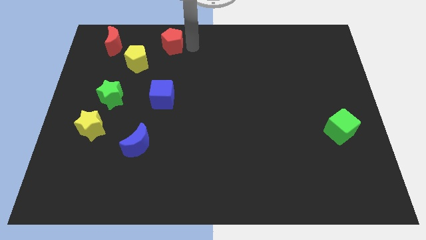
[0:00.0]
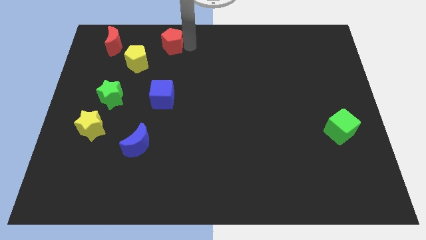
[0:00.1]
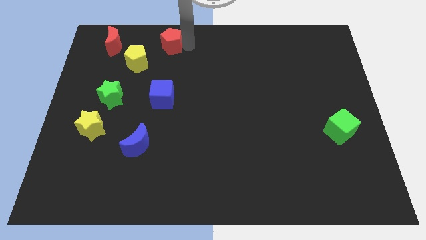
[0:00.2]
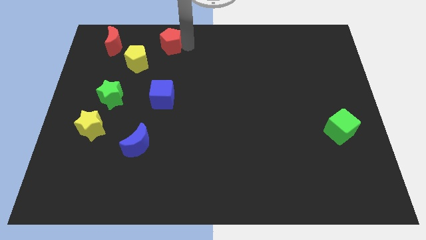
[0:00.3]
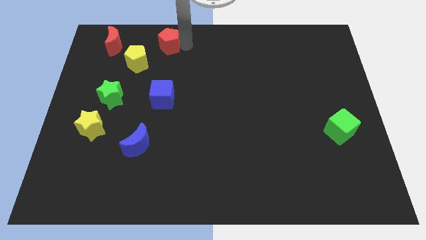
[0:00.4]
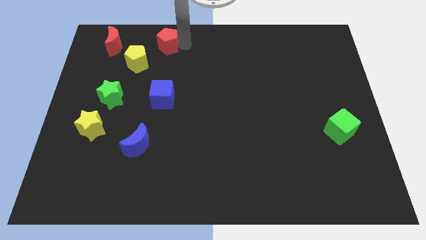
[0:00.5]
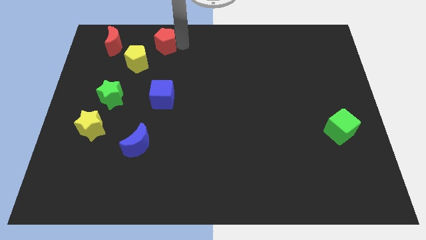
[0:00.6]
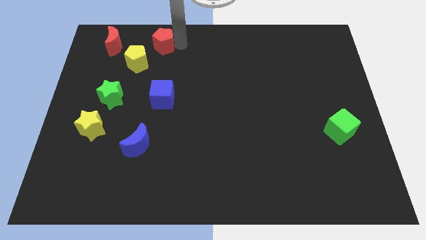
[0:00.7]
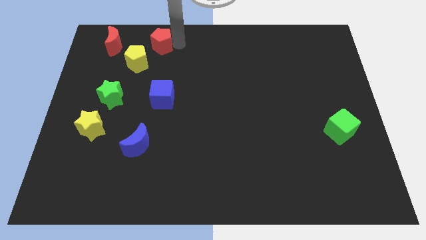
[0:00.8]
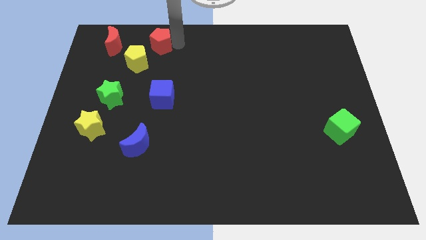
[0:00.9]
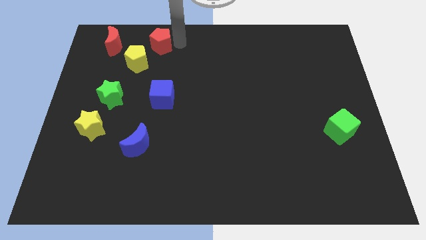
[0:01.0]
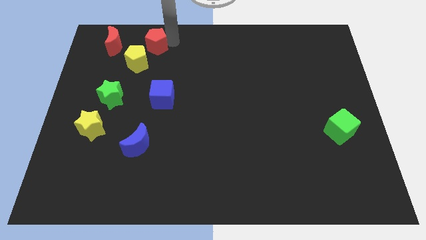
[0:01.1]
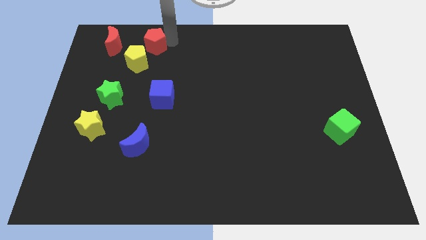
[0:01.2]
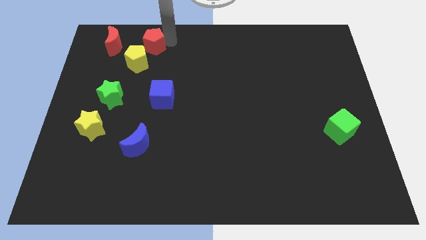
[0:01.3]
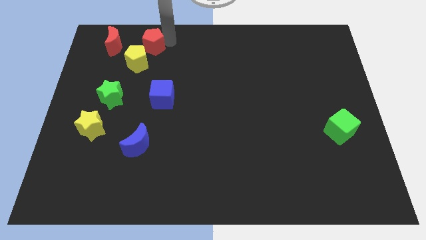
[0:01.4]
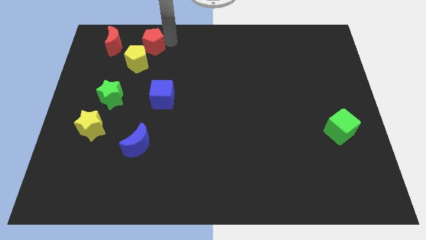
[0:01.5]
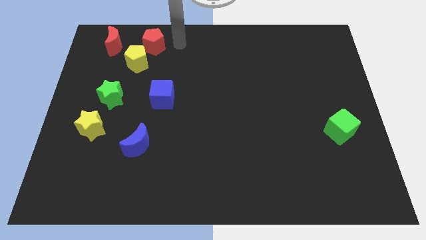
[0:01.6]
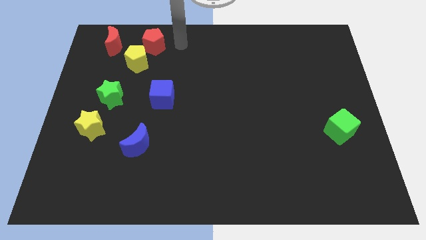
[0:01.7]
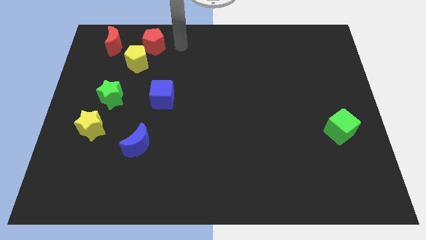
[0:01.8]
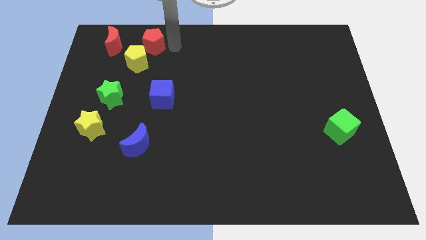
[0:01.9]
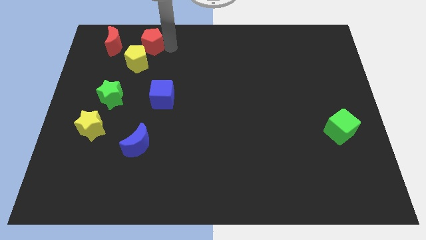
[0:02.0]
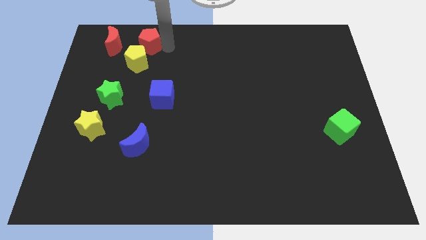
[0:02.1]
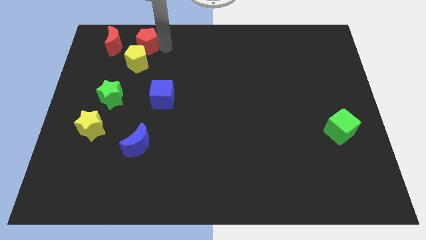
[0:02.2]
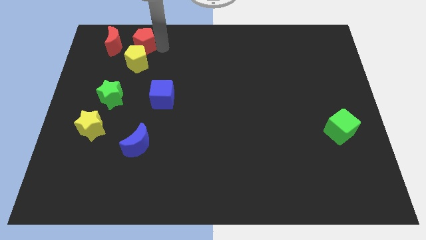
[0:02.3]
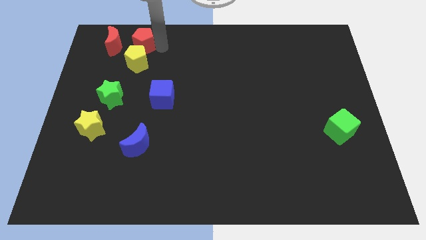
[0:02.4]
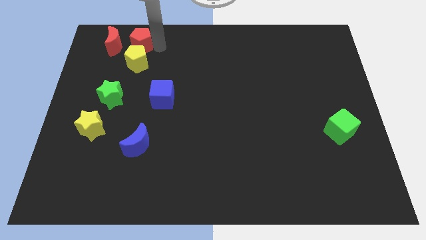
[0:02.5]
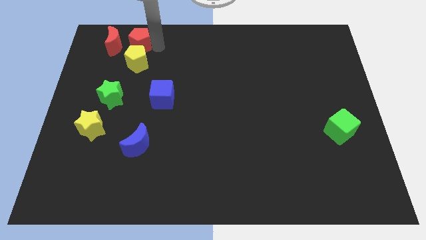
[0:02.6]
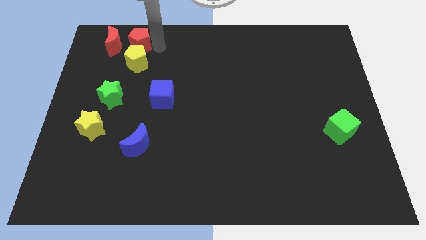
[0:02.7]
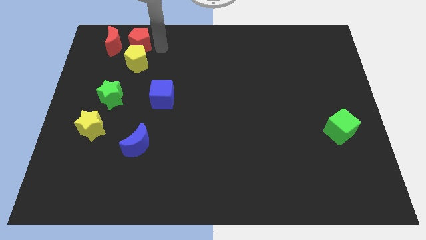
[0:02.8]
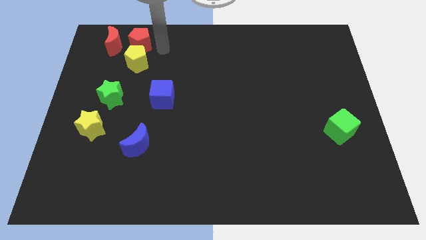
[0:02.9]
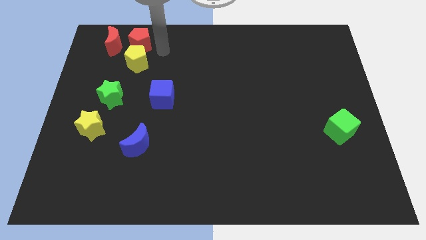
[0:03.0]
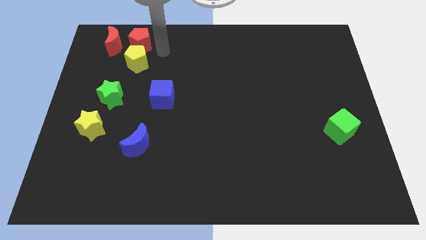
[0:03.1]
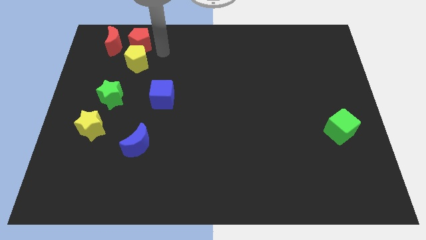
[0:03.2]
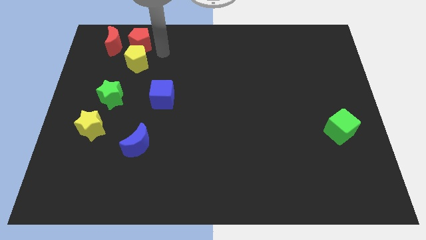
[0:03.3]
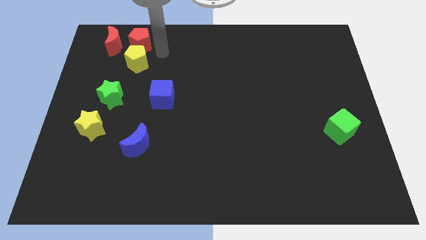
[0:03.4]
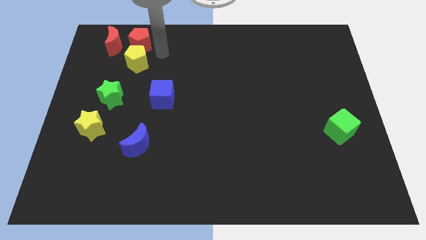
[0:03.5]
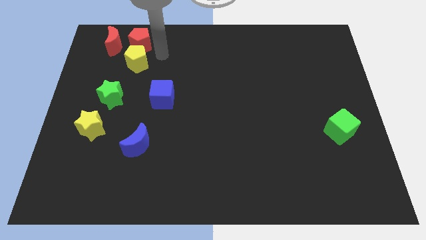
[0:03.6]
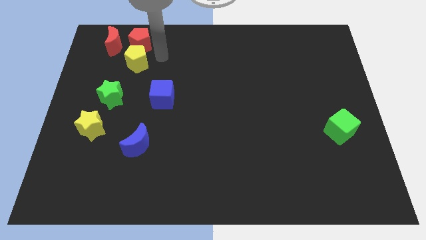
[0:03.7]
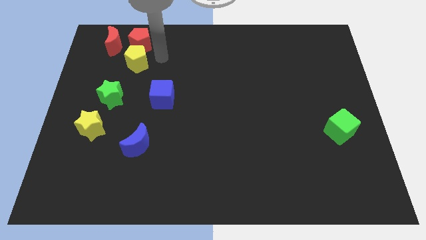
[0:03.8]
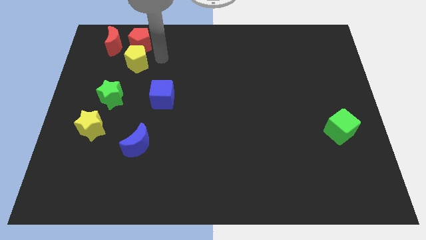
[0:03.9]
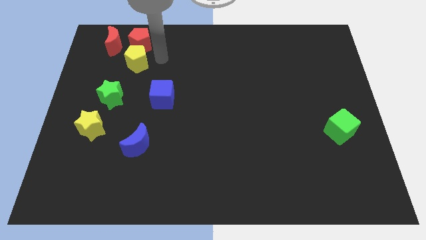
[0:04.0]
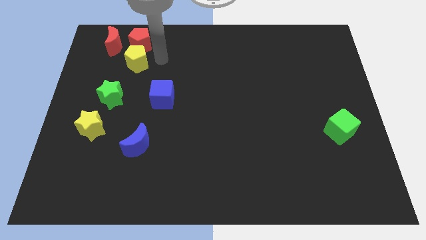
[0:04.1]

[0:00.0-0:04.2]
slide the red pentagon vertically above the yellow pentagon

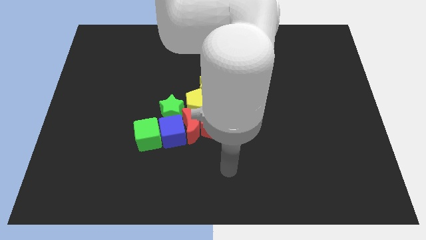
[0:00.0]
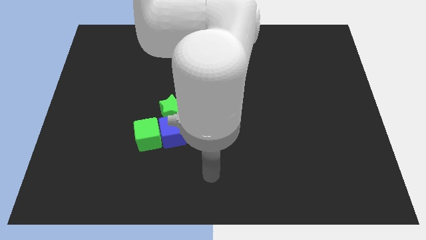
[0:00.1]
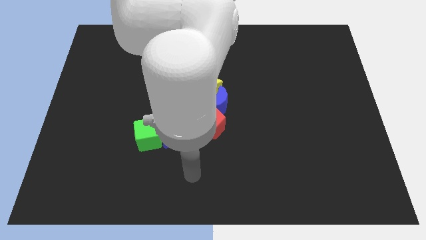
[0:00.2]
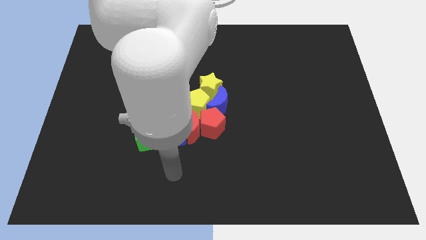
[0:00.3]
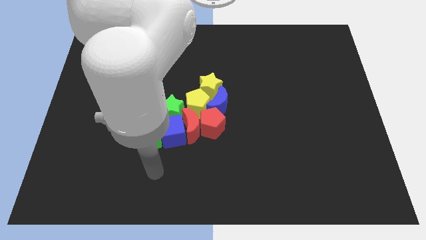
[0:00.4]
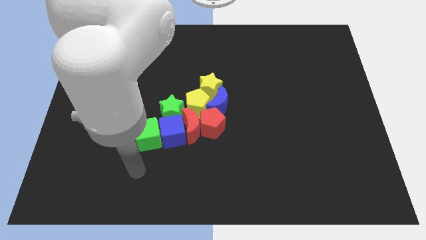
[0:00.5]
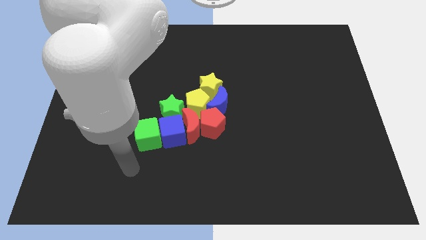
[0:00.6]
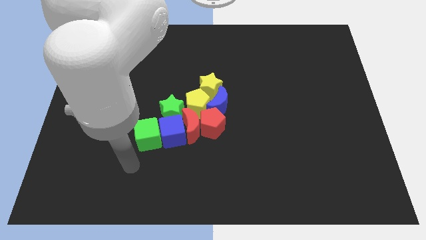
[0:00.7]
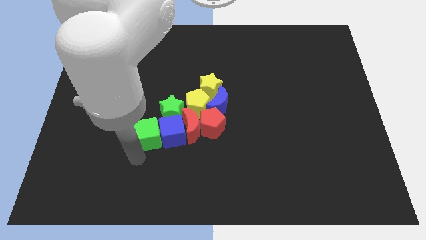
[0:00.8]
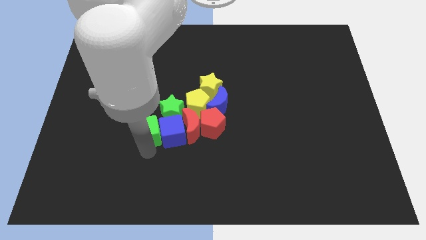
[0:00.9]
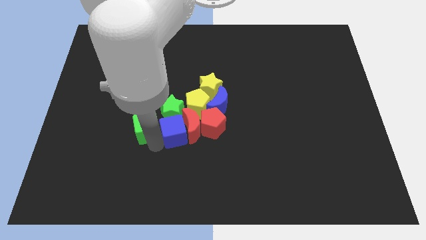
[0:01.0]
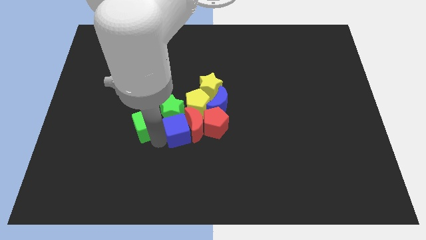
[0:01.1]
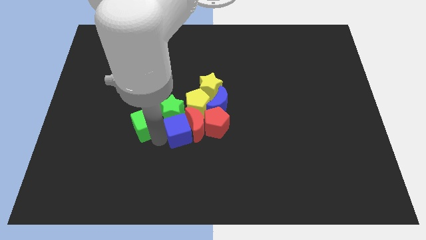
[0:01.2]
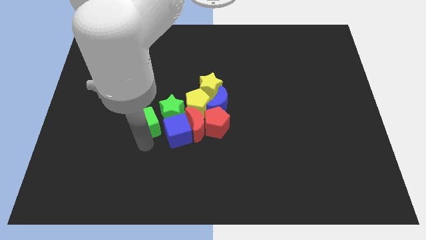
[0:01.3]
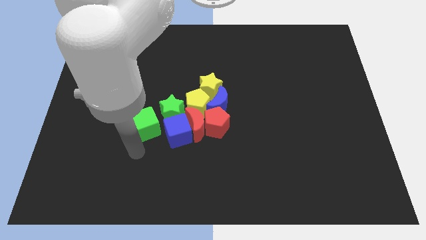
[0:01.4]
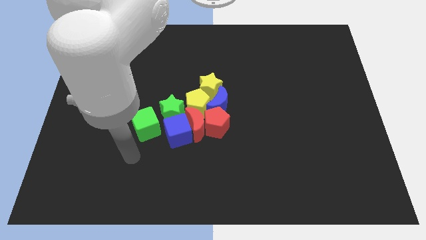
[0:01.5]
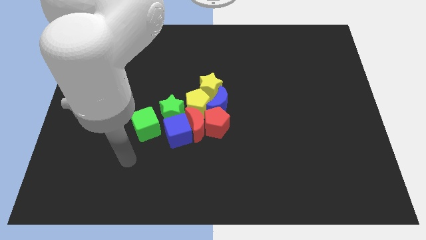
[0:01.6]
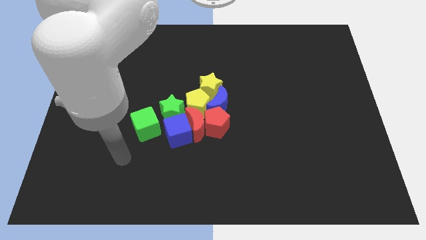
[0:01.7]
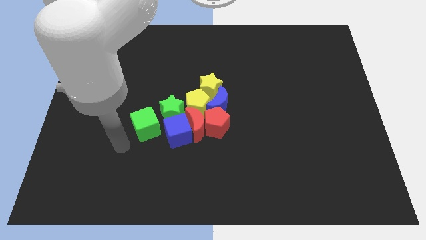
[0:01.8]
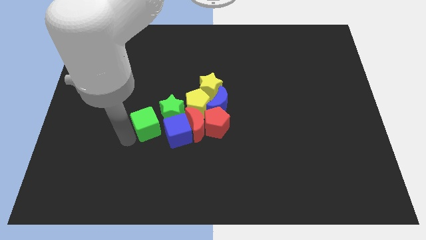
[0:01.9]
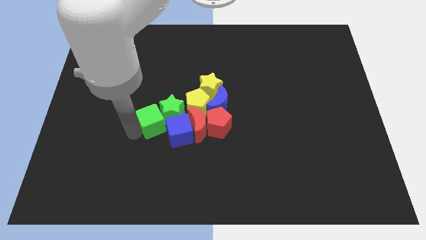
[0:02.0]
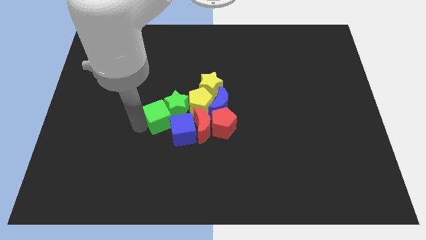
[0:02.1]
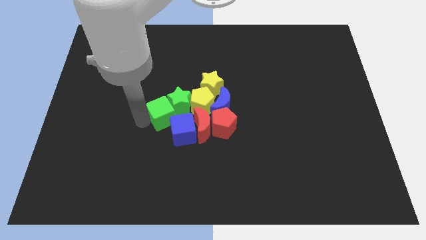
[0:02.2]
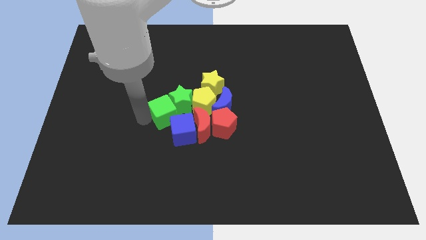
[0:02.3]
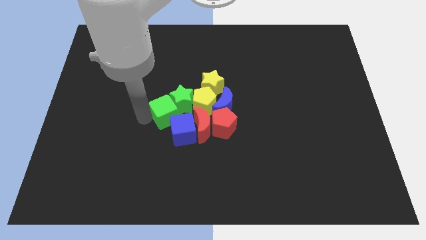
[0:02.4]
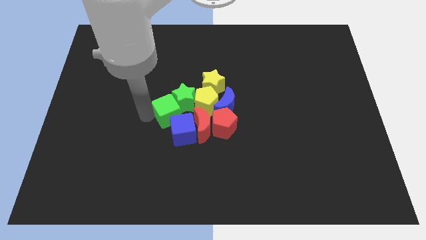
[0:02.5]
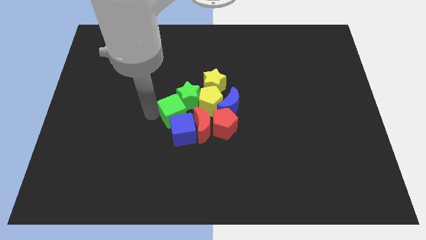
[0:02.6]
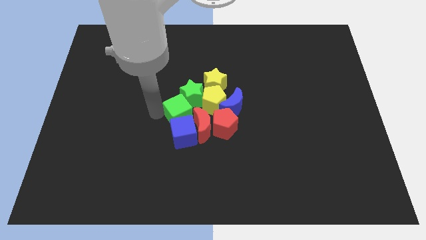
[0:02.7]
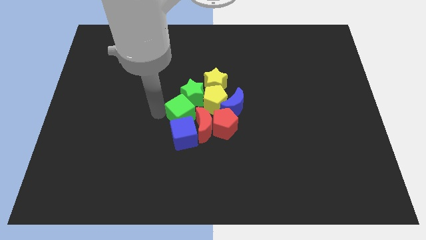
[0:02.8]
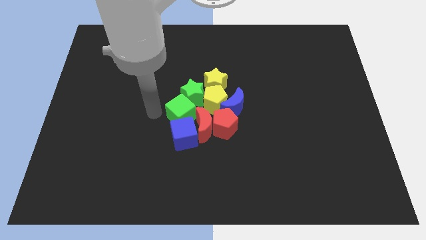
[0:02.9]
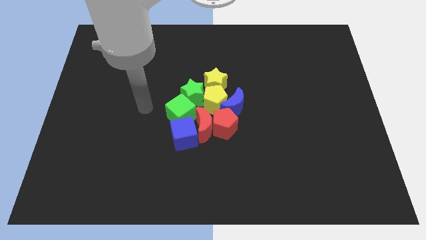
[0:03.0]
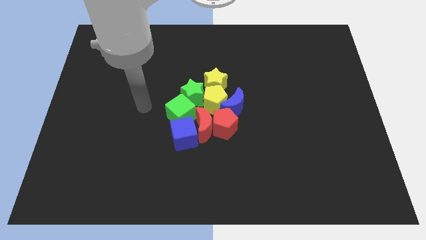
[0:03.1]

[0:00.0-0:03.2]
push green cube into green star

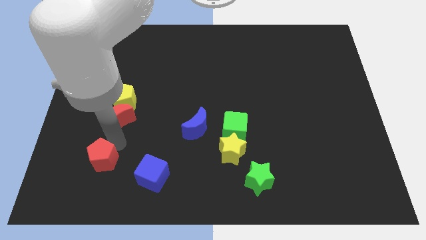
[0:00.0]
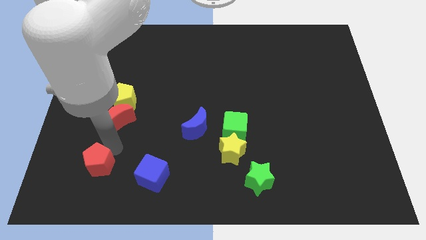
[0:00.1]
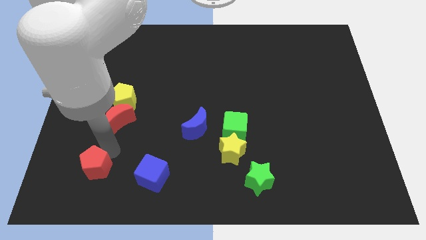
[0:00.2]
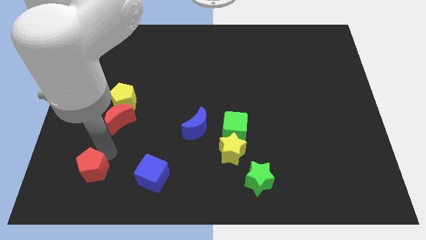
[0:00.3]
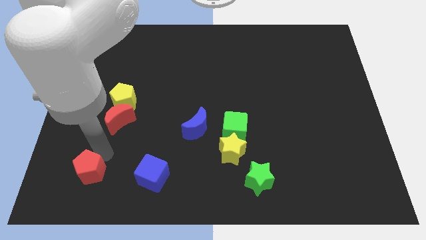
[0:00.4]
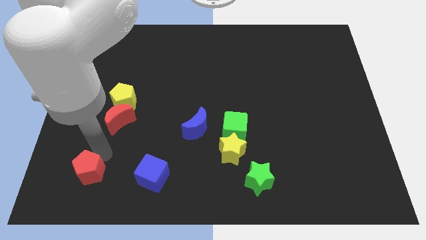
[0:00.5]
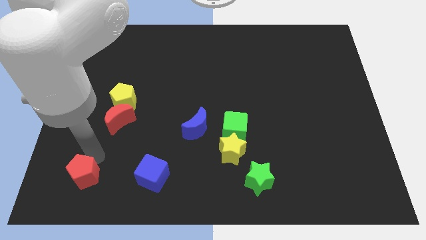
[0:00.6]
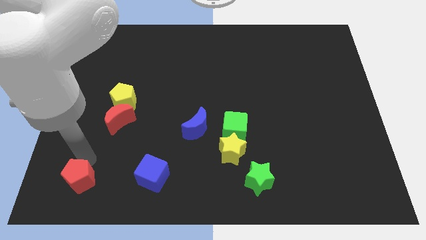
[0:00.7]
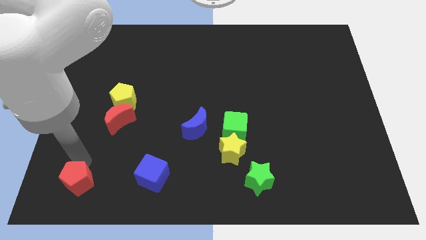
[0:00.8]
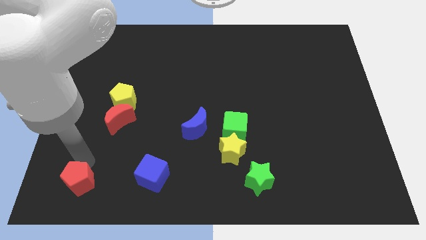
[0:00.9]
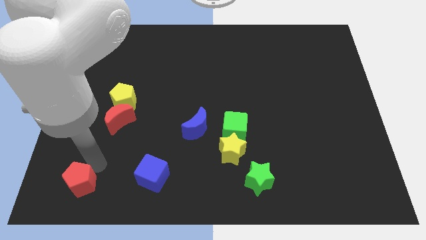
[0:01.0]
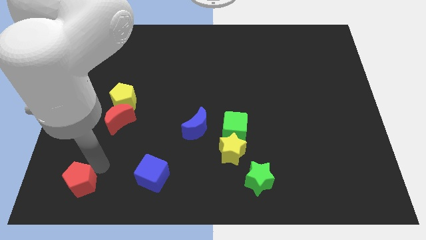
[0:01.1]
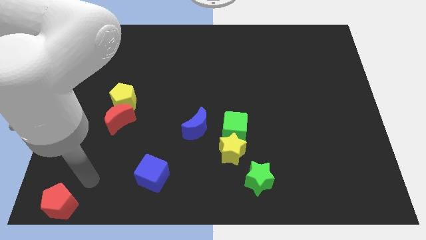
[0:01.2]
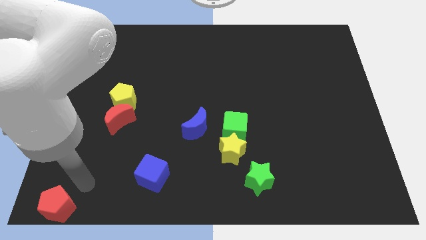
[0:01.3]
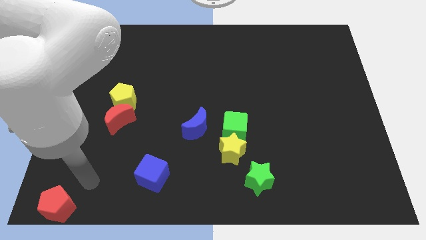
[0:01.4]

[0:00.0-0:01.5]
place red pentagon on the bottom left
